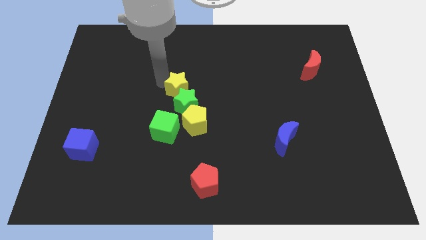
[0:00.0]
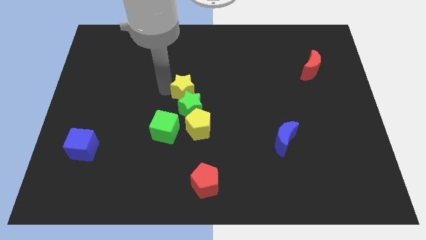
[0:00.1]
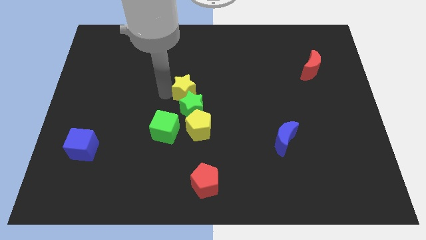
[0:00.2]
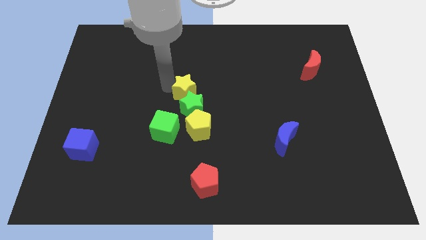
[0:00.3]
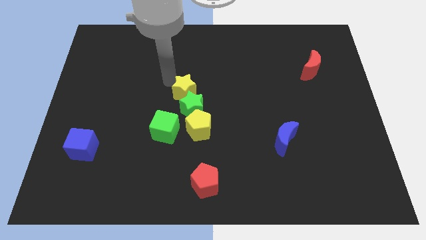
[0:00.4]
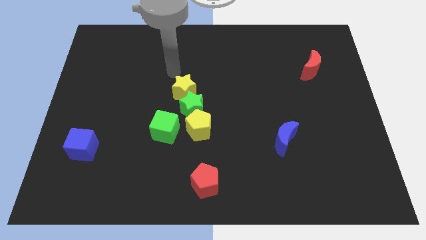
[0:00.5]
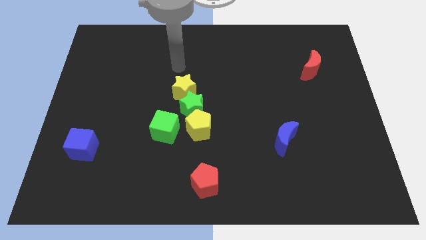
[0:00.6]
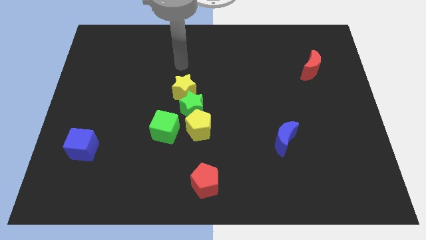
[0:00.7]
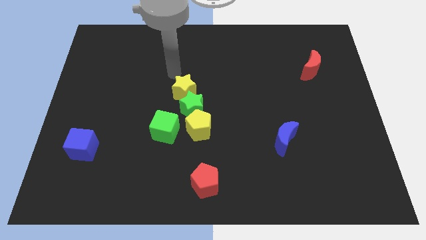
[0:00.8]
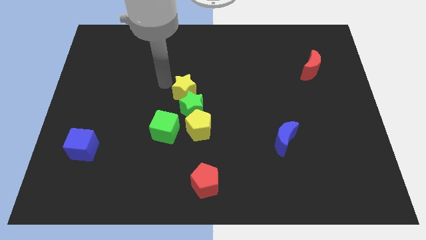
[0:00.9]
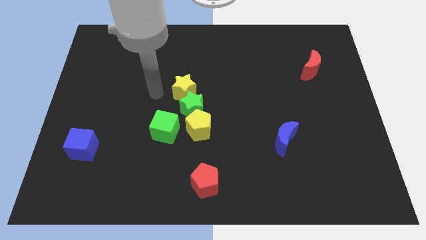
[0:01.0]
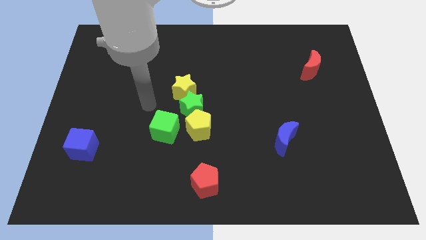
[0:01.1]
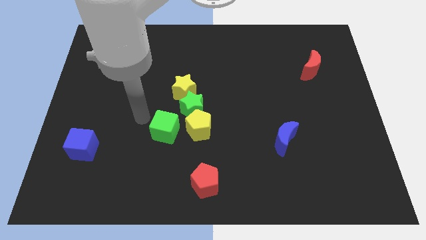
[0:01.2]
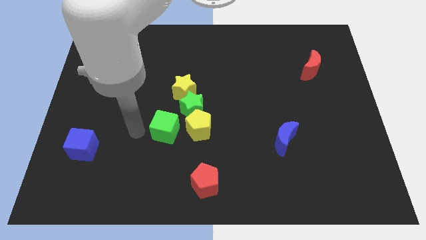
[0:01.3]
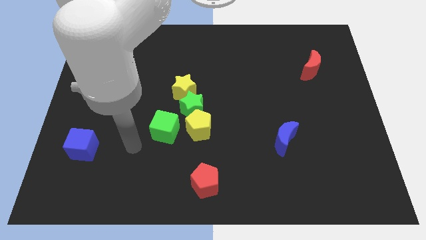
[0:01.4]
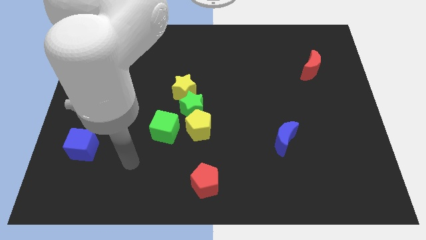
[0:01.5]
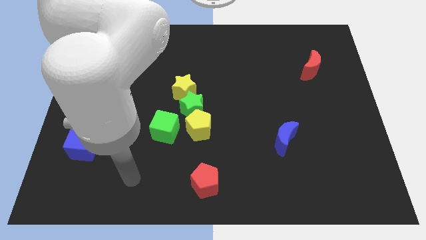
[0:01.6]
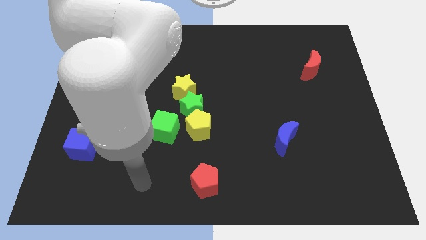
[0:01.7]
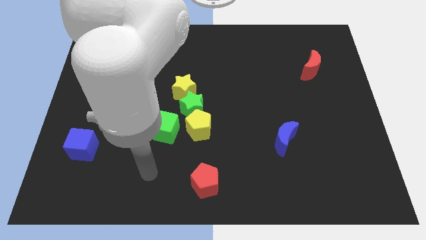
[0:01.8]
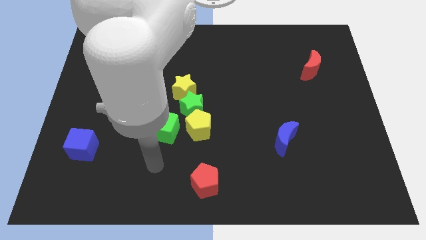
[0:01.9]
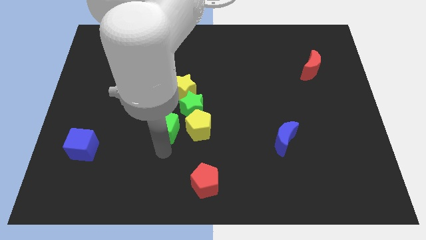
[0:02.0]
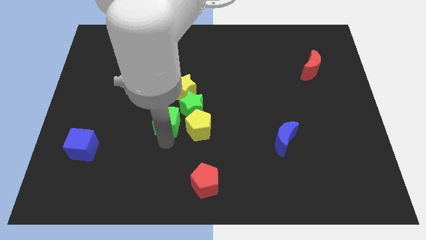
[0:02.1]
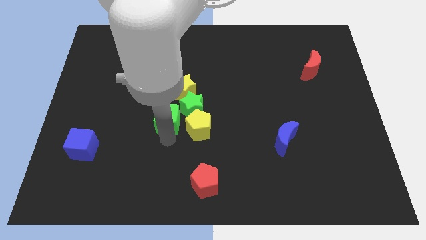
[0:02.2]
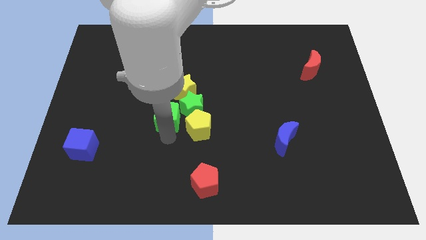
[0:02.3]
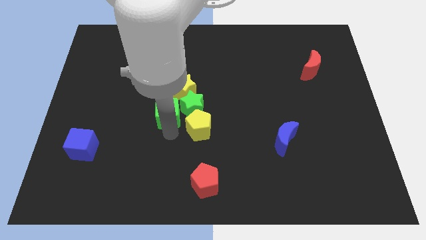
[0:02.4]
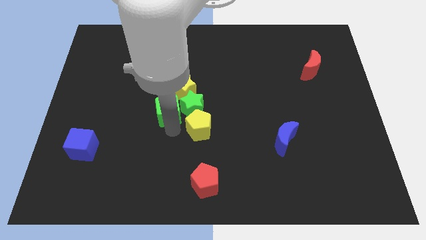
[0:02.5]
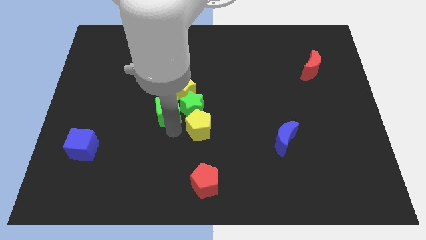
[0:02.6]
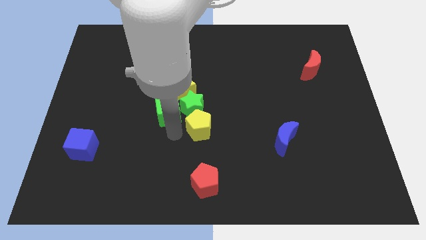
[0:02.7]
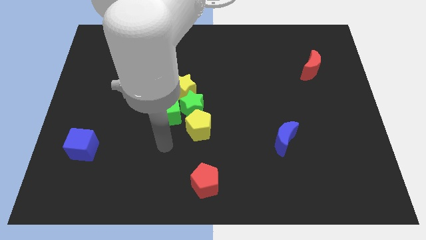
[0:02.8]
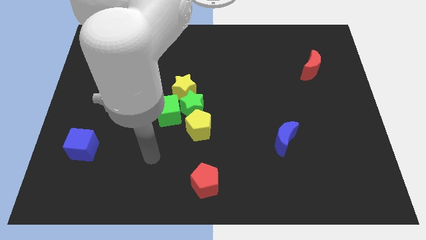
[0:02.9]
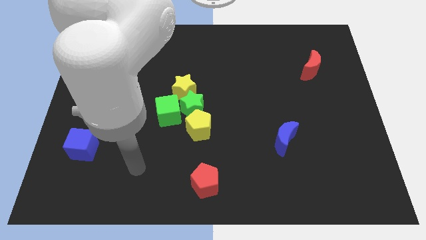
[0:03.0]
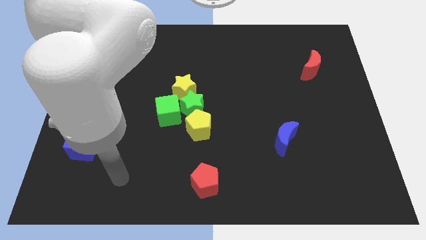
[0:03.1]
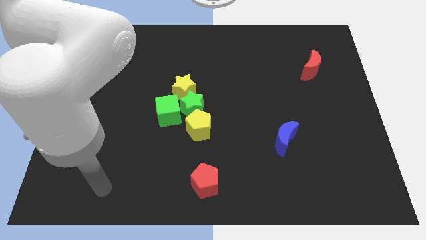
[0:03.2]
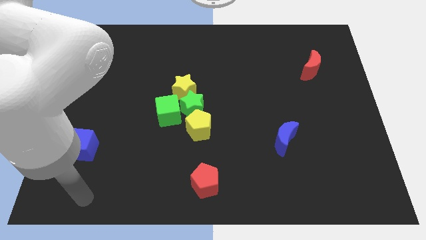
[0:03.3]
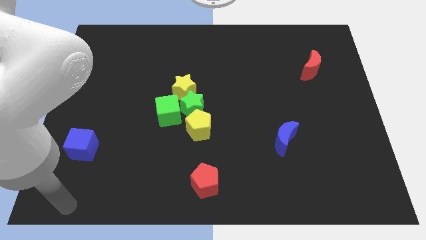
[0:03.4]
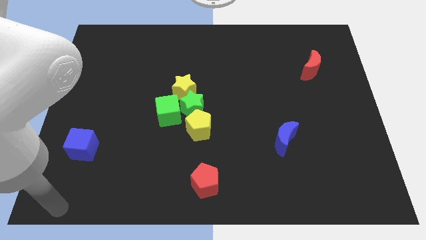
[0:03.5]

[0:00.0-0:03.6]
adjust the green cube and yellow star to from a group

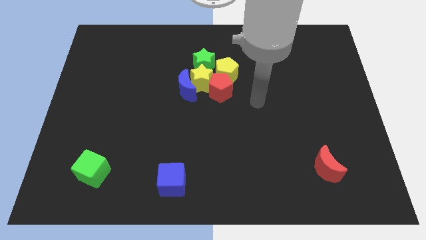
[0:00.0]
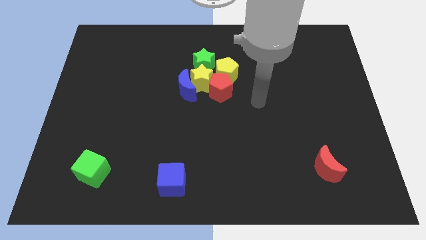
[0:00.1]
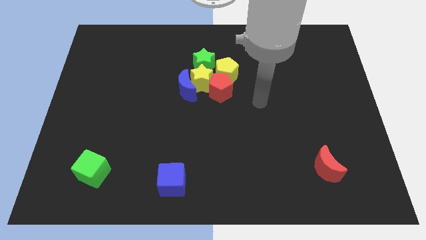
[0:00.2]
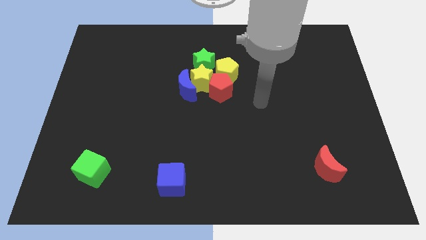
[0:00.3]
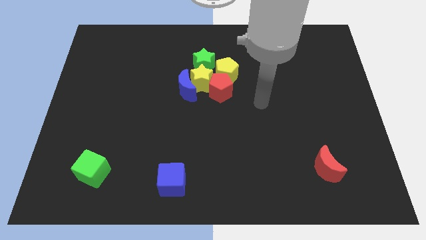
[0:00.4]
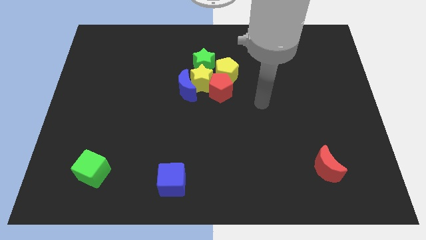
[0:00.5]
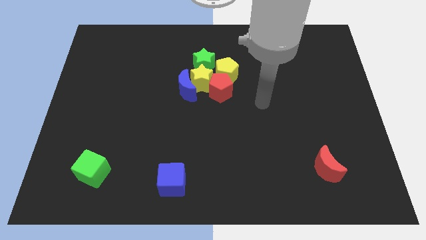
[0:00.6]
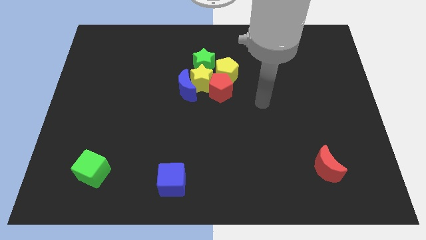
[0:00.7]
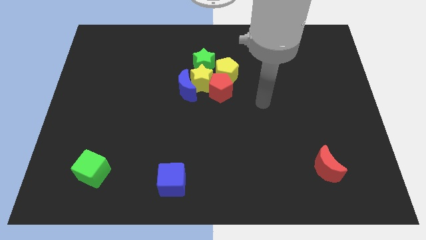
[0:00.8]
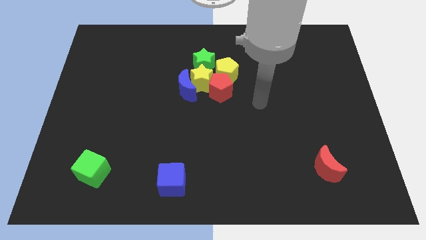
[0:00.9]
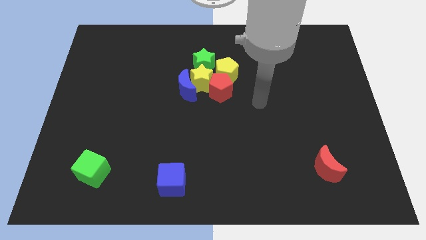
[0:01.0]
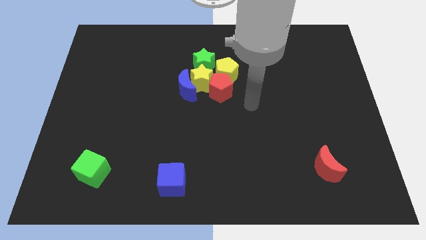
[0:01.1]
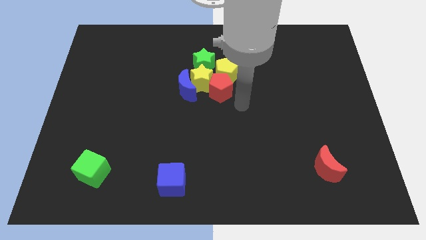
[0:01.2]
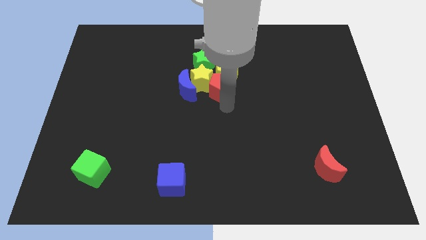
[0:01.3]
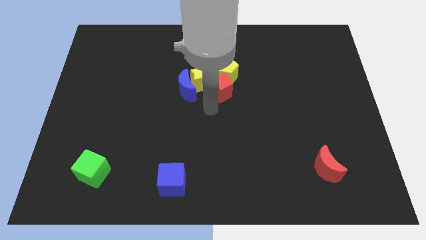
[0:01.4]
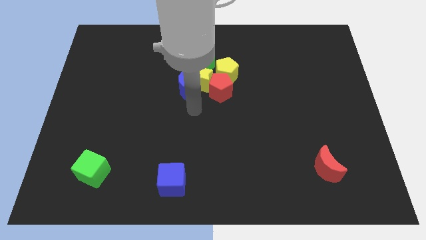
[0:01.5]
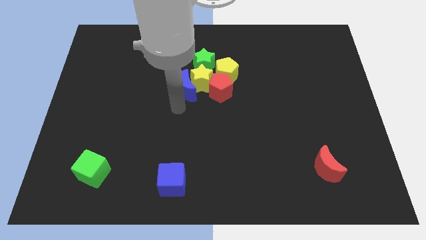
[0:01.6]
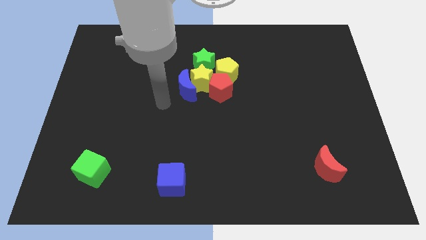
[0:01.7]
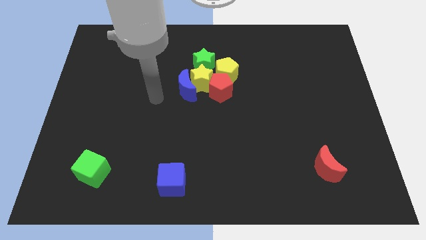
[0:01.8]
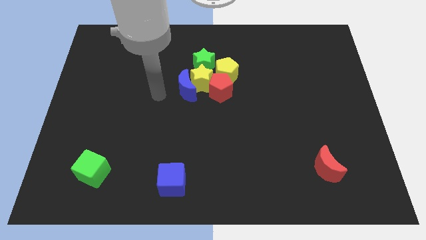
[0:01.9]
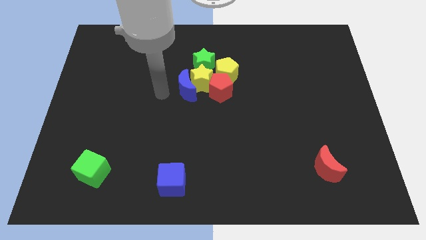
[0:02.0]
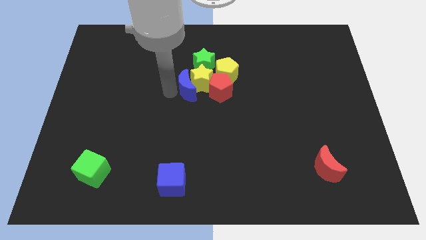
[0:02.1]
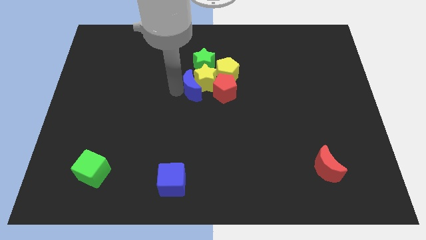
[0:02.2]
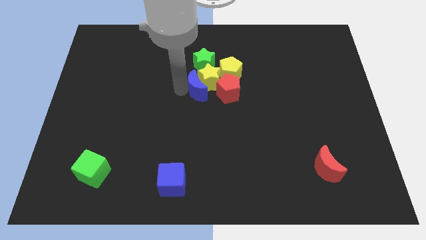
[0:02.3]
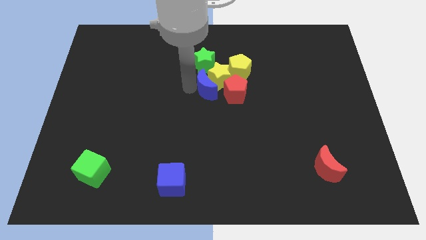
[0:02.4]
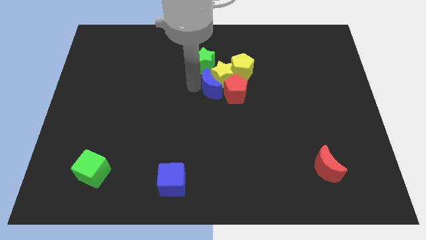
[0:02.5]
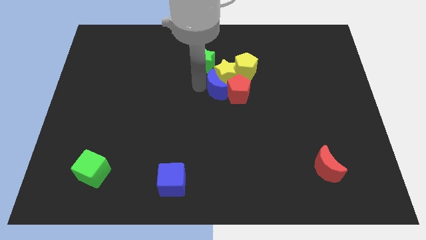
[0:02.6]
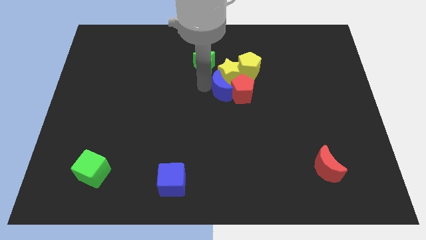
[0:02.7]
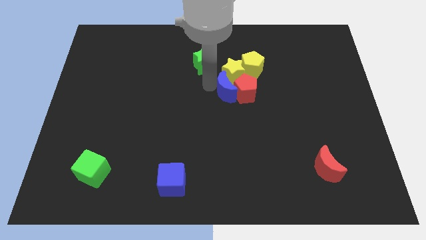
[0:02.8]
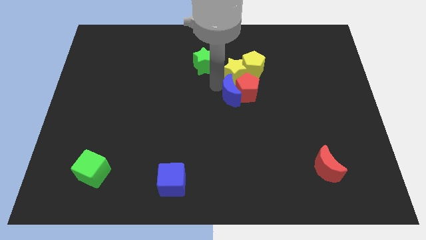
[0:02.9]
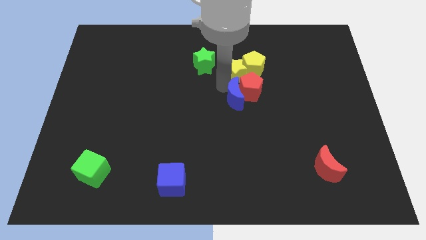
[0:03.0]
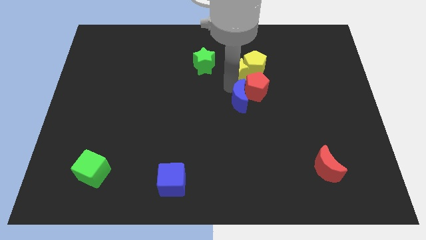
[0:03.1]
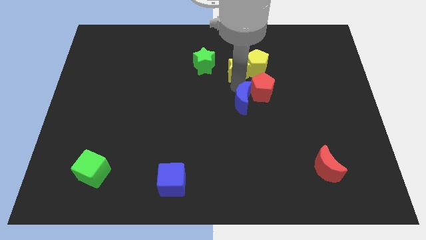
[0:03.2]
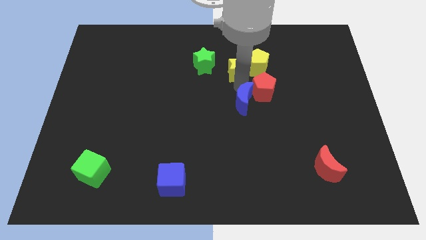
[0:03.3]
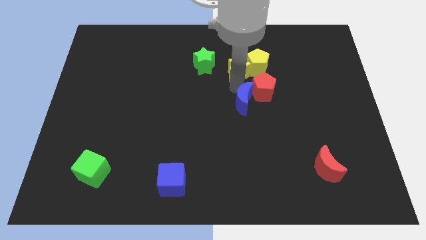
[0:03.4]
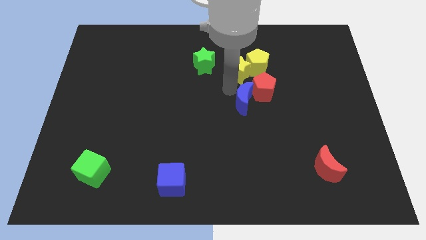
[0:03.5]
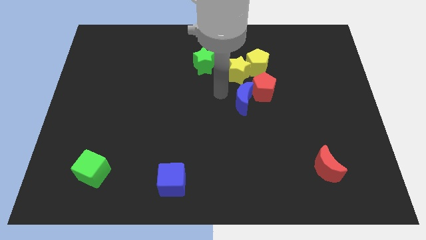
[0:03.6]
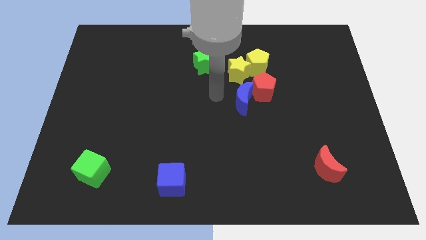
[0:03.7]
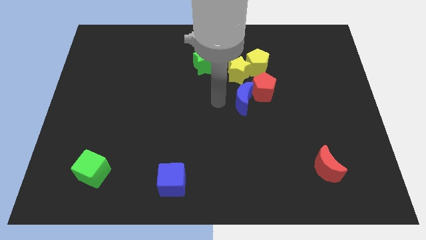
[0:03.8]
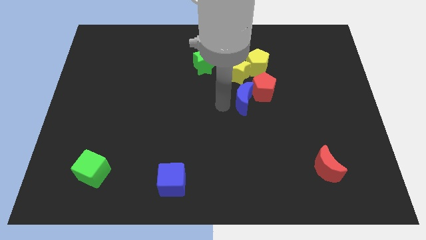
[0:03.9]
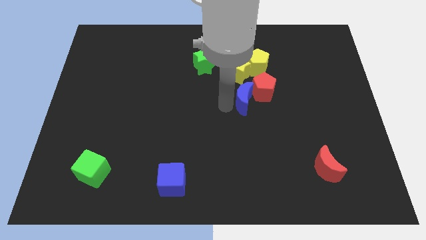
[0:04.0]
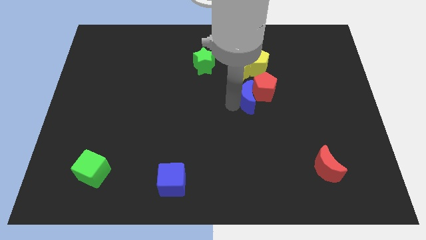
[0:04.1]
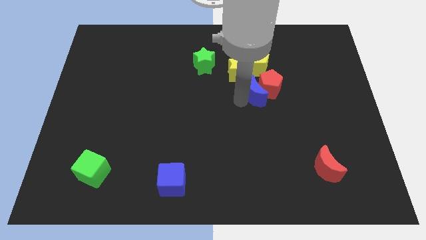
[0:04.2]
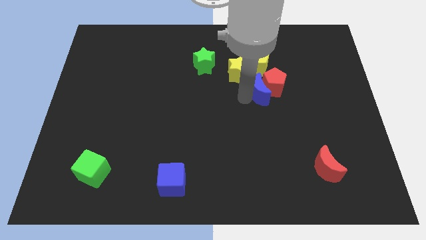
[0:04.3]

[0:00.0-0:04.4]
push the group of blocks away from the green star

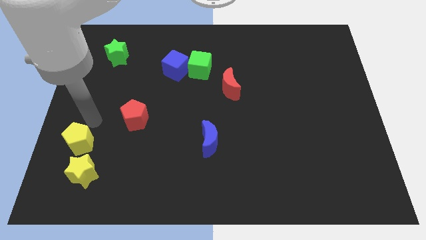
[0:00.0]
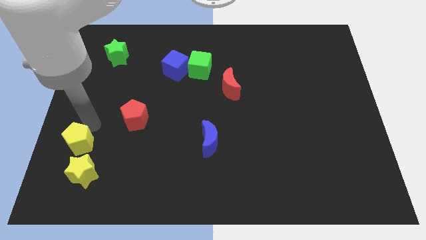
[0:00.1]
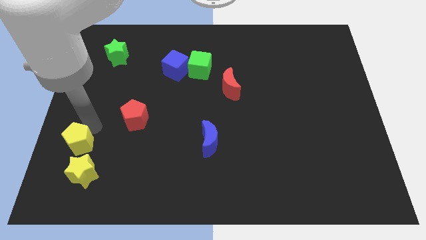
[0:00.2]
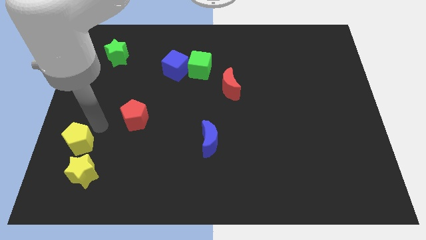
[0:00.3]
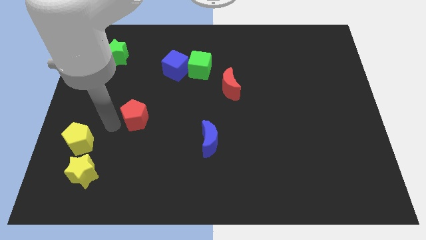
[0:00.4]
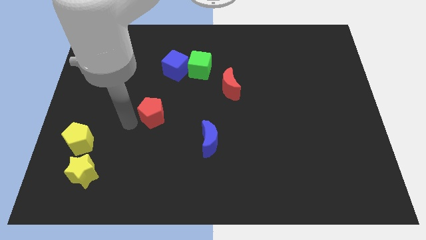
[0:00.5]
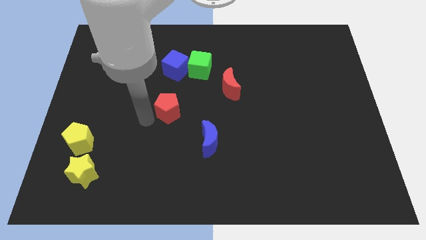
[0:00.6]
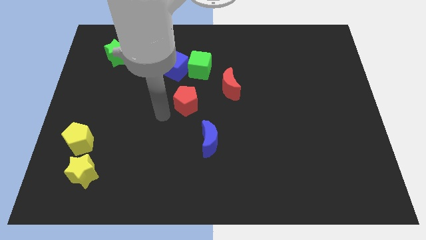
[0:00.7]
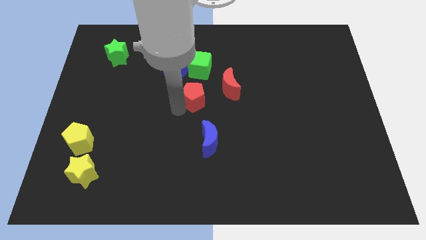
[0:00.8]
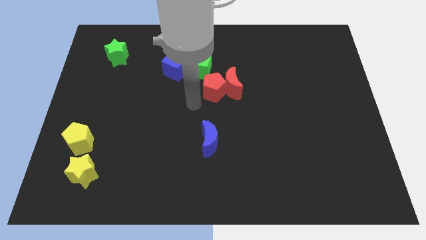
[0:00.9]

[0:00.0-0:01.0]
place red pentagon to the bottom of green cube

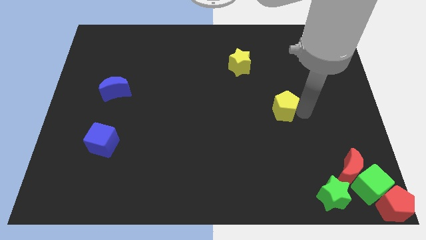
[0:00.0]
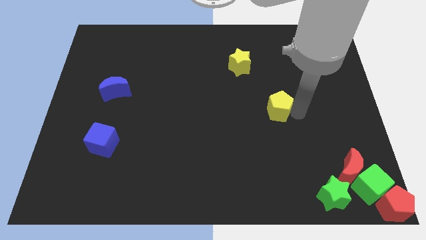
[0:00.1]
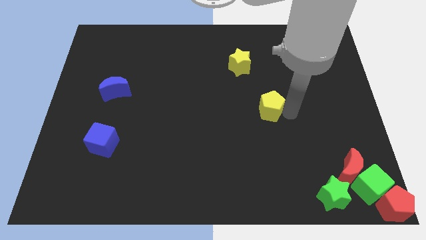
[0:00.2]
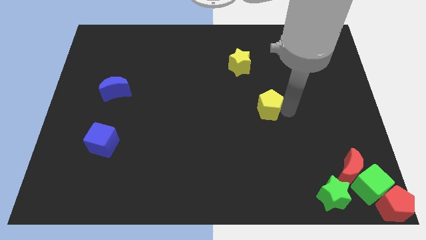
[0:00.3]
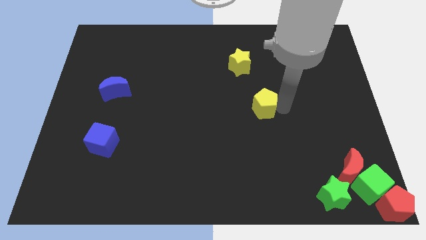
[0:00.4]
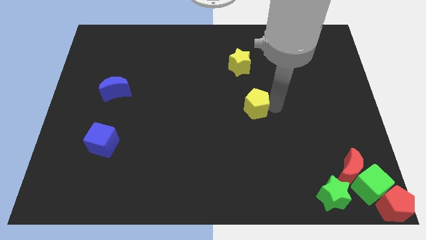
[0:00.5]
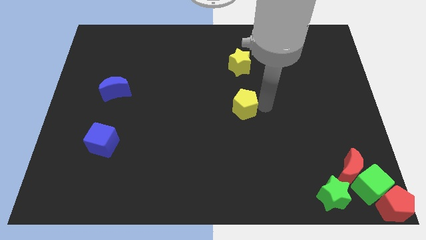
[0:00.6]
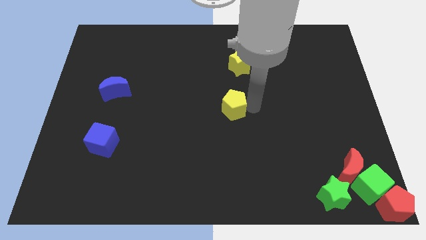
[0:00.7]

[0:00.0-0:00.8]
move the yellow pentagon to the bottom of the yellow star
